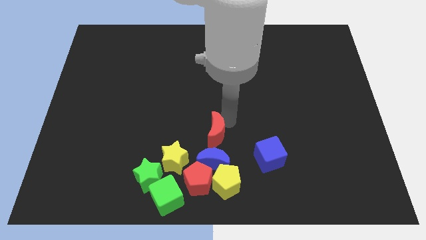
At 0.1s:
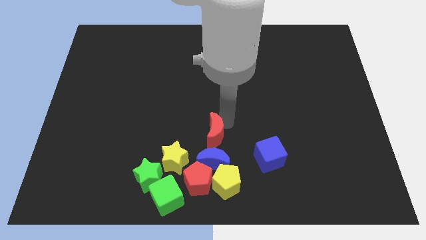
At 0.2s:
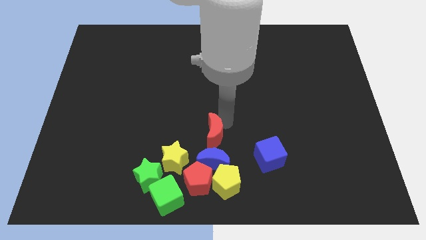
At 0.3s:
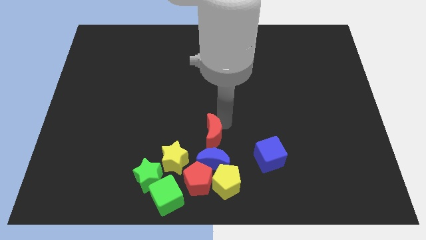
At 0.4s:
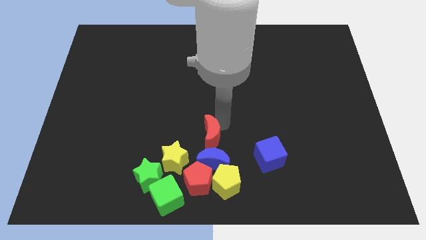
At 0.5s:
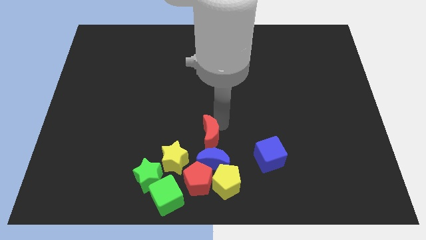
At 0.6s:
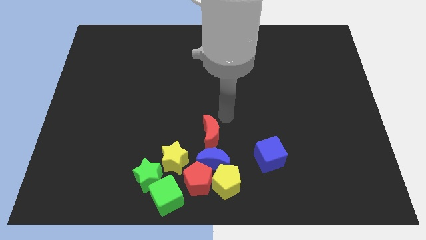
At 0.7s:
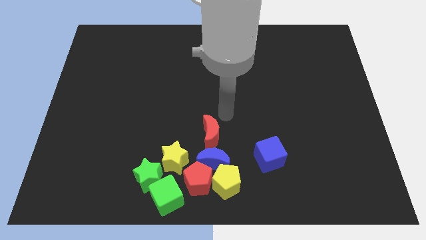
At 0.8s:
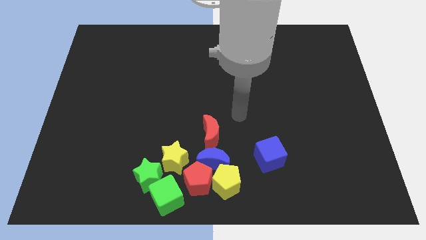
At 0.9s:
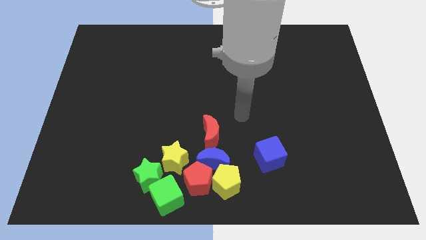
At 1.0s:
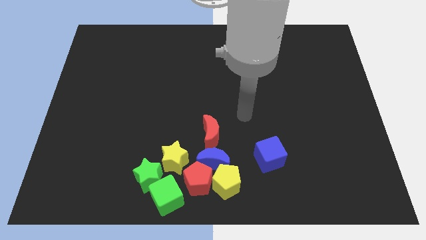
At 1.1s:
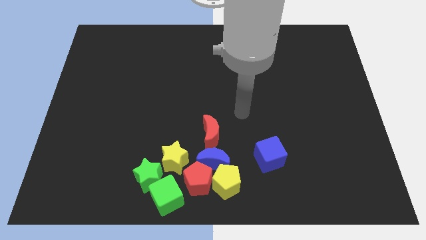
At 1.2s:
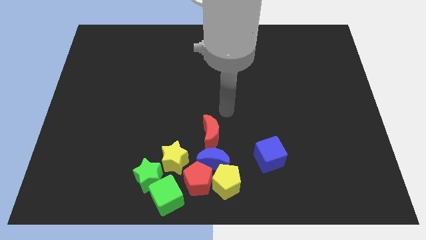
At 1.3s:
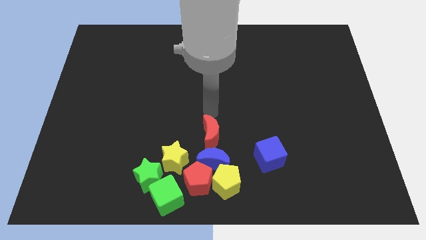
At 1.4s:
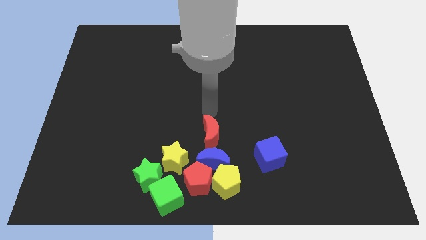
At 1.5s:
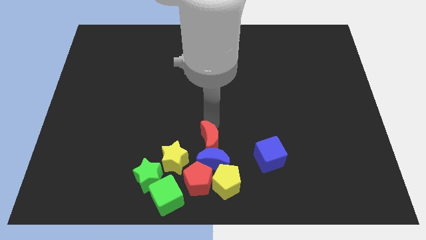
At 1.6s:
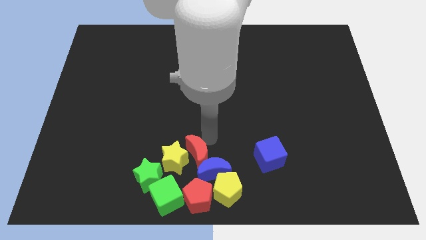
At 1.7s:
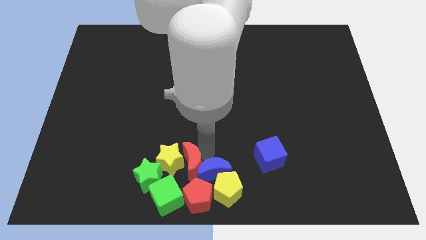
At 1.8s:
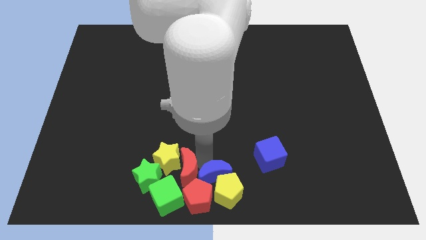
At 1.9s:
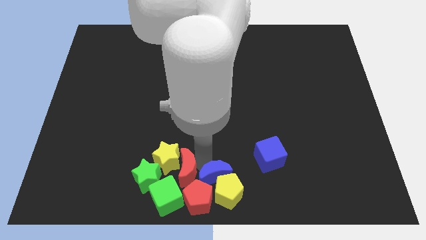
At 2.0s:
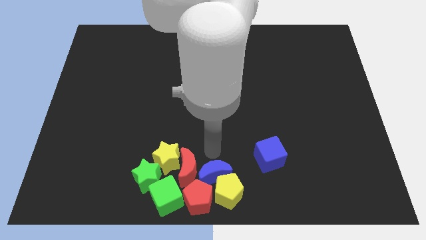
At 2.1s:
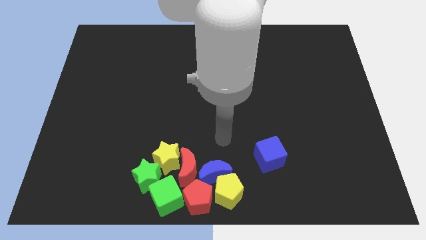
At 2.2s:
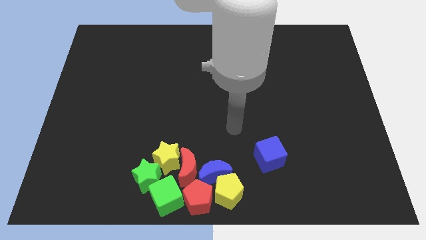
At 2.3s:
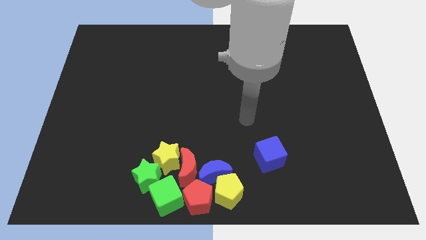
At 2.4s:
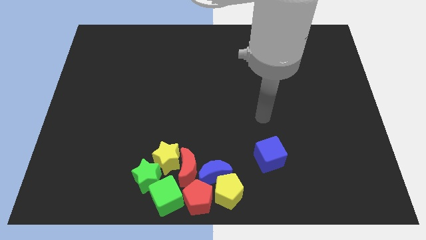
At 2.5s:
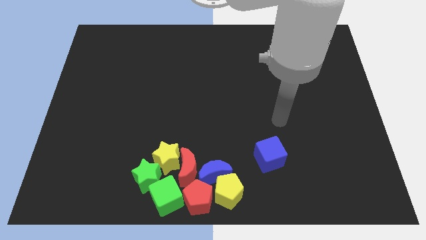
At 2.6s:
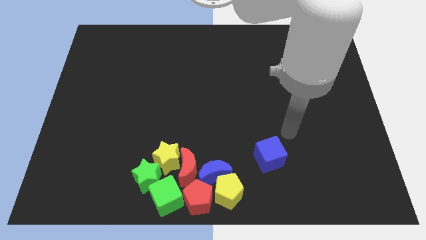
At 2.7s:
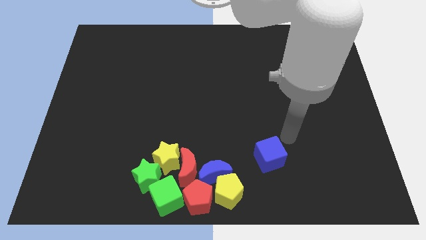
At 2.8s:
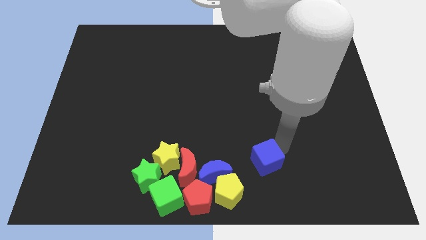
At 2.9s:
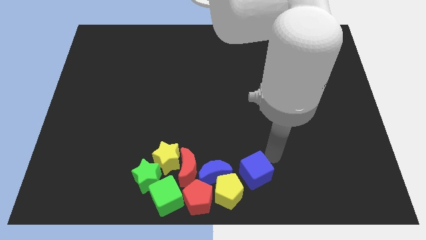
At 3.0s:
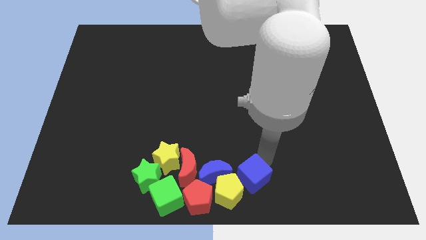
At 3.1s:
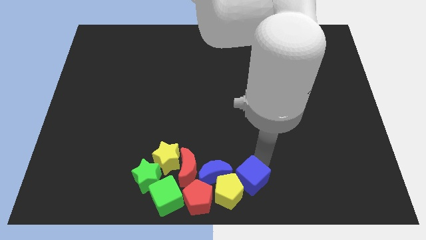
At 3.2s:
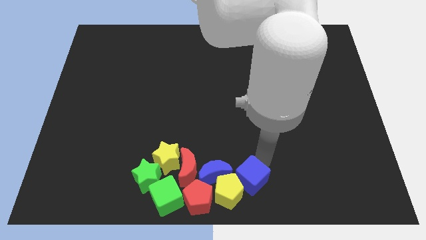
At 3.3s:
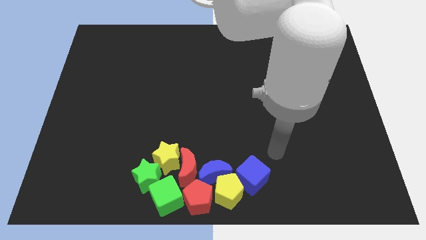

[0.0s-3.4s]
make a group of all the blocks

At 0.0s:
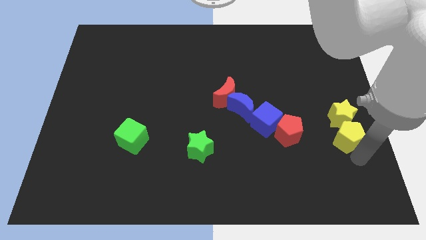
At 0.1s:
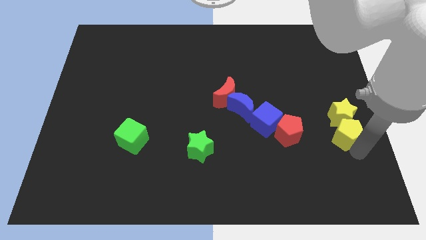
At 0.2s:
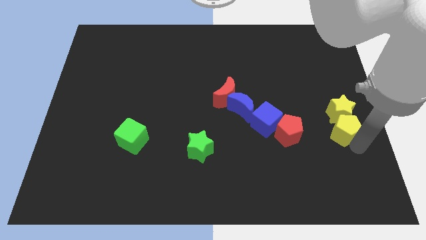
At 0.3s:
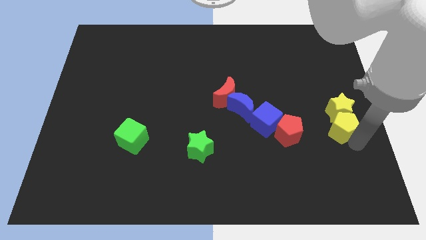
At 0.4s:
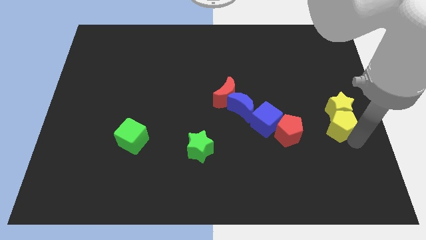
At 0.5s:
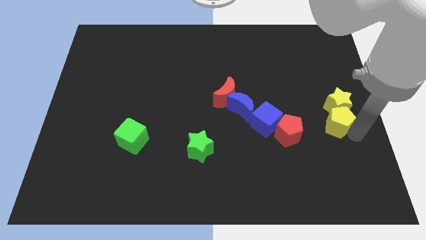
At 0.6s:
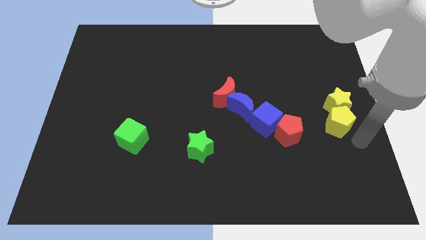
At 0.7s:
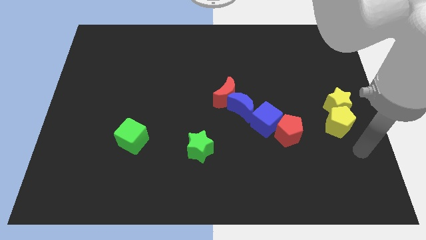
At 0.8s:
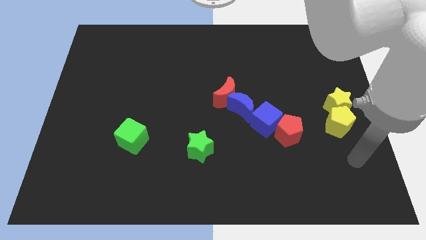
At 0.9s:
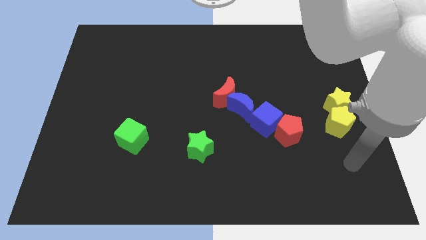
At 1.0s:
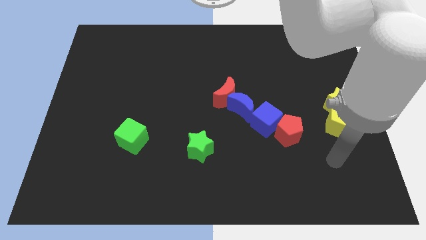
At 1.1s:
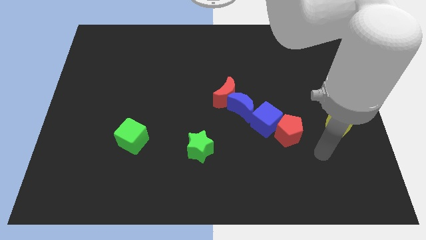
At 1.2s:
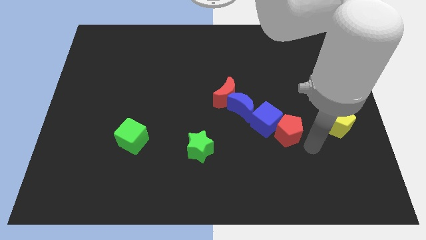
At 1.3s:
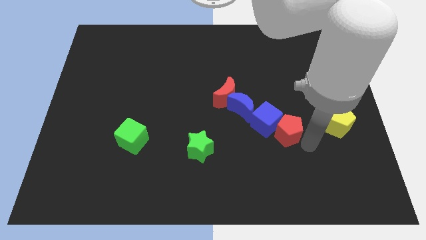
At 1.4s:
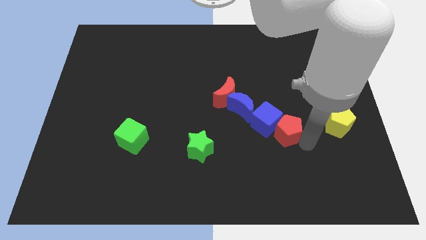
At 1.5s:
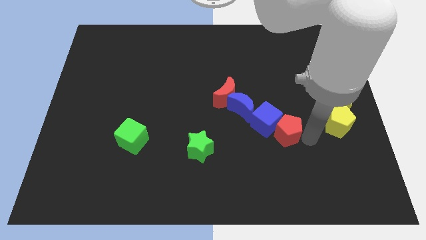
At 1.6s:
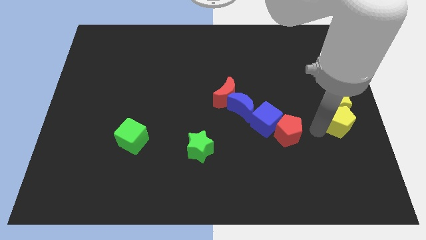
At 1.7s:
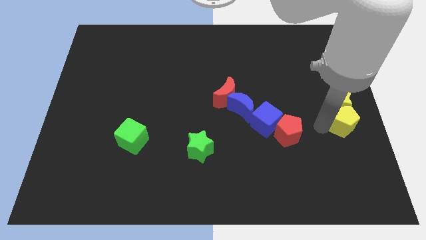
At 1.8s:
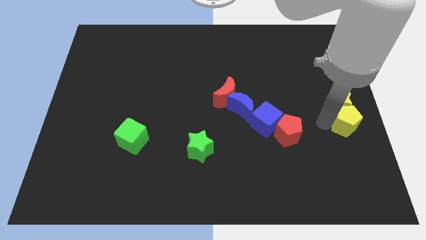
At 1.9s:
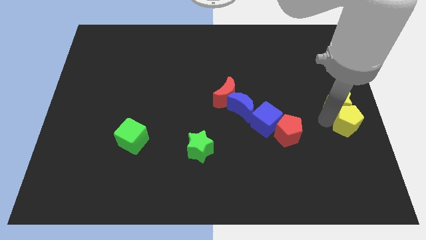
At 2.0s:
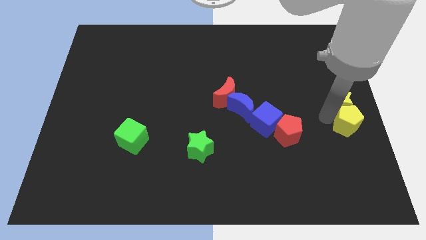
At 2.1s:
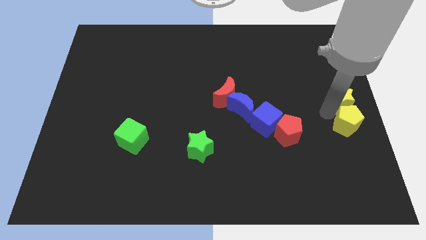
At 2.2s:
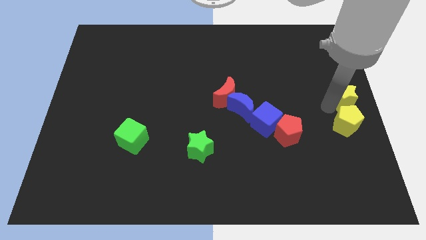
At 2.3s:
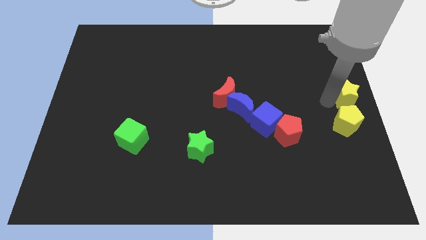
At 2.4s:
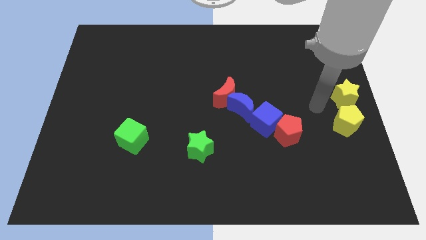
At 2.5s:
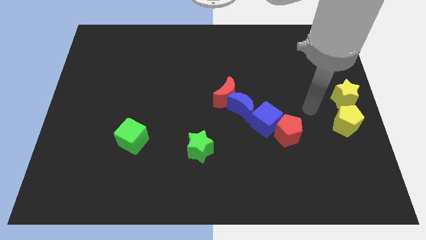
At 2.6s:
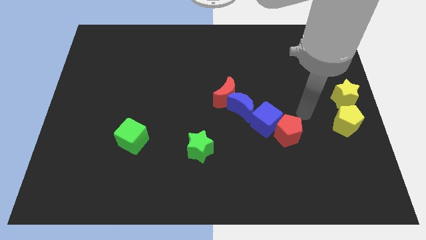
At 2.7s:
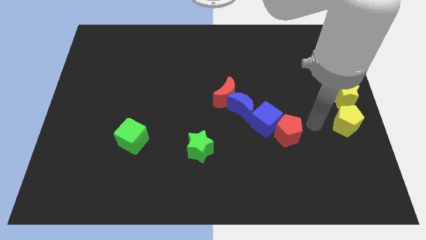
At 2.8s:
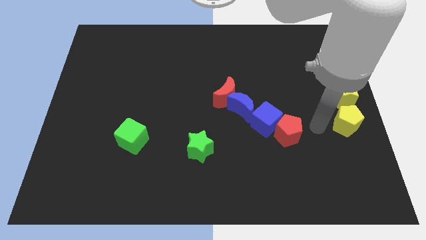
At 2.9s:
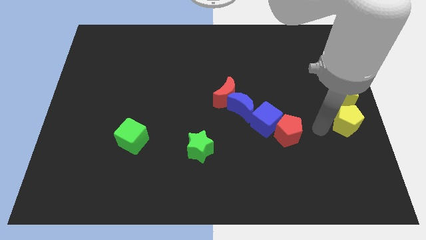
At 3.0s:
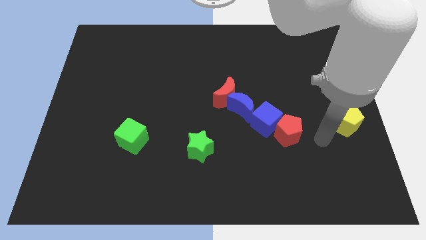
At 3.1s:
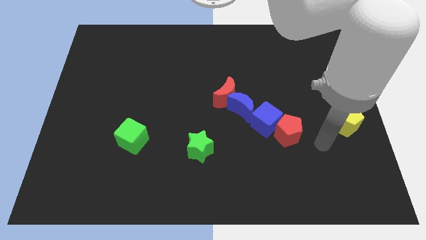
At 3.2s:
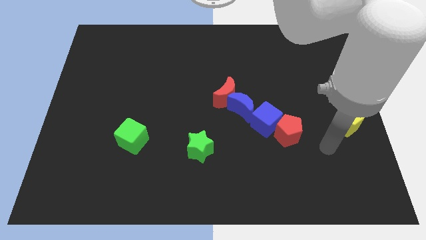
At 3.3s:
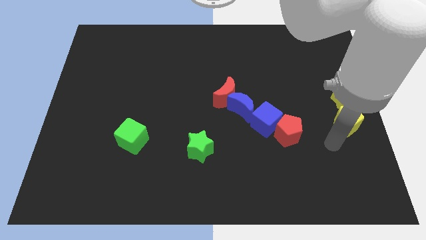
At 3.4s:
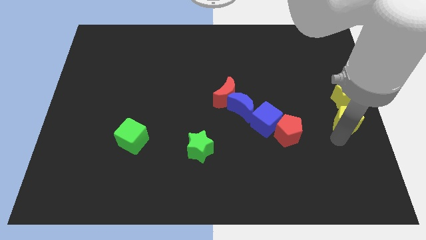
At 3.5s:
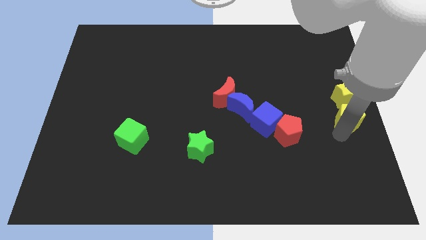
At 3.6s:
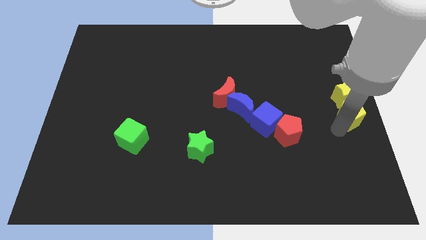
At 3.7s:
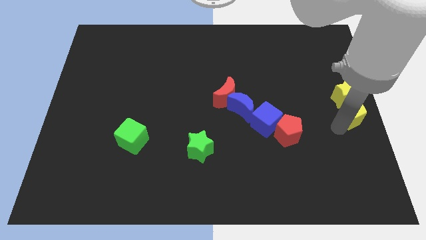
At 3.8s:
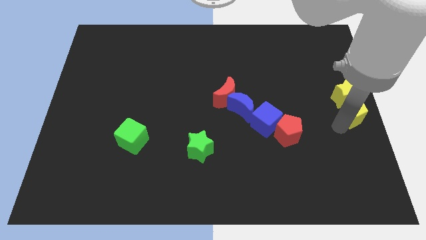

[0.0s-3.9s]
push the yellow pentagon along with the yellow star to the right center of the board

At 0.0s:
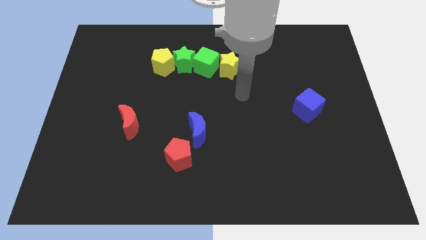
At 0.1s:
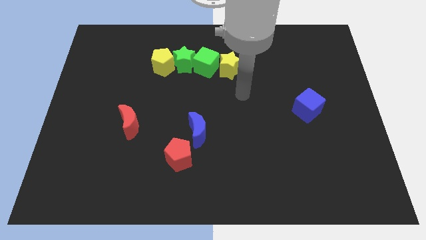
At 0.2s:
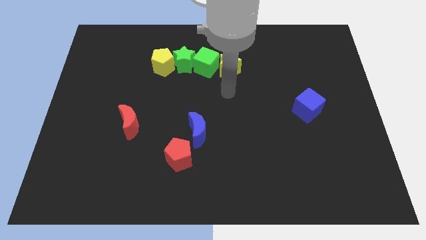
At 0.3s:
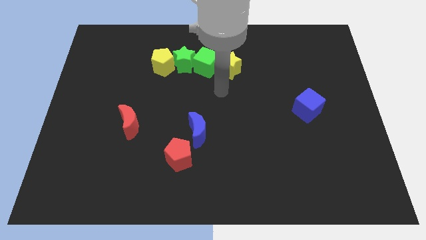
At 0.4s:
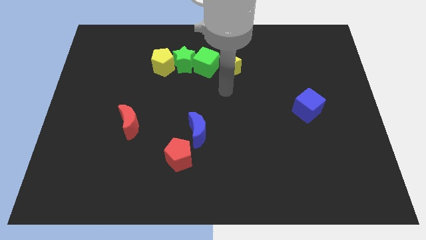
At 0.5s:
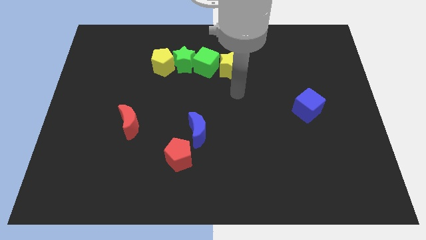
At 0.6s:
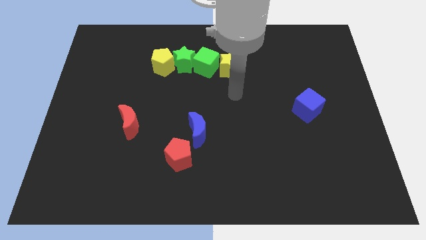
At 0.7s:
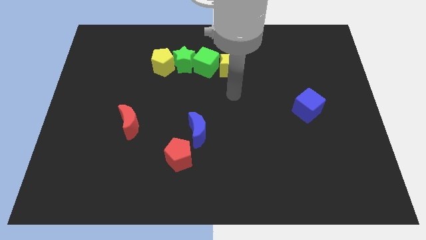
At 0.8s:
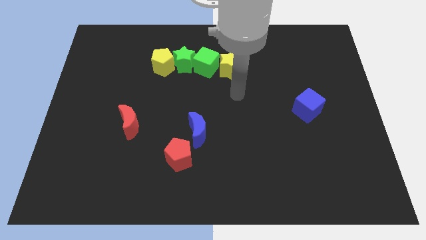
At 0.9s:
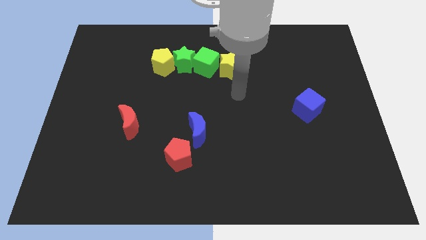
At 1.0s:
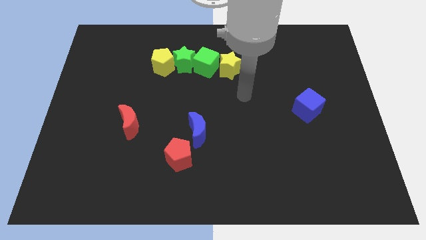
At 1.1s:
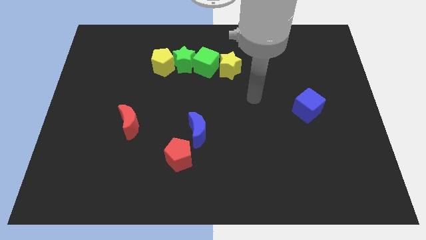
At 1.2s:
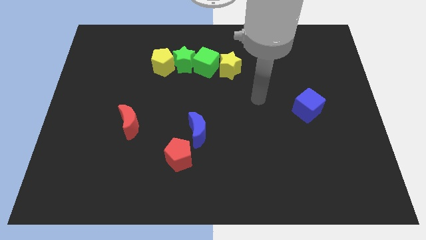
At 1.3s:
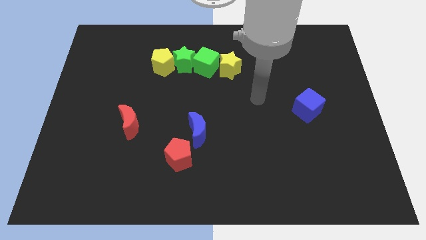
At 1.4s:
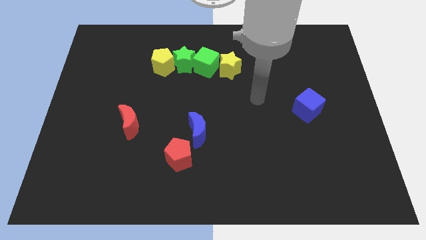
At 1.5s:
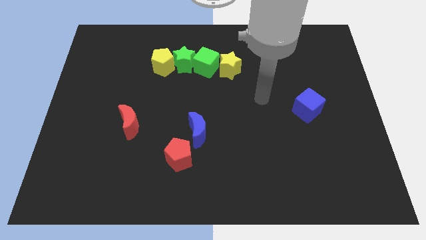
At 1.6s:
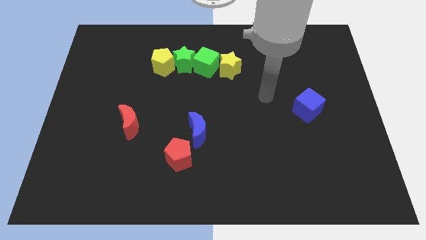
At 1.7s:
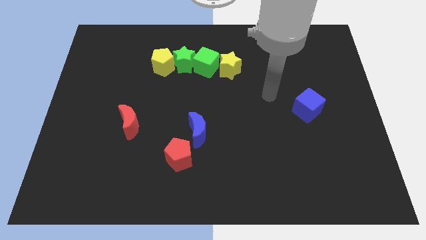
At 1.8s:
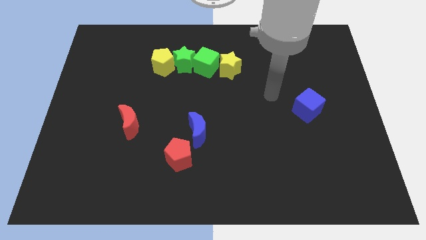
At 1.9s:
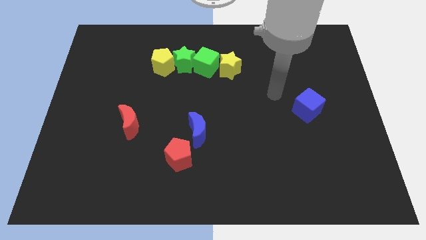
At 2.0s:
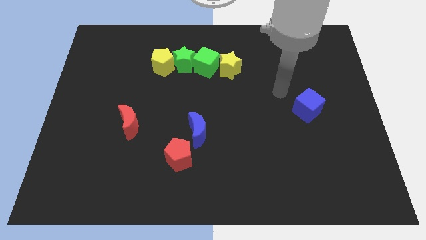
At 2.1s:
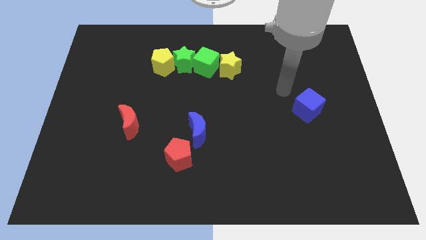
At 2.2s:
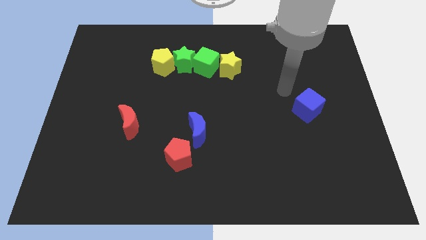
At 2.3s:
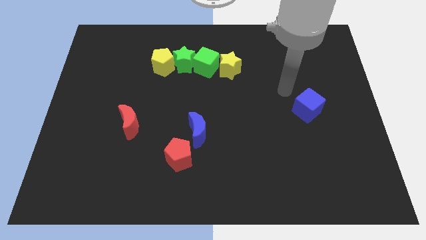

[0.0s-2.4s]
move the arm to the top left of the blue cube
